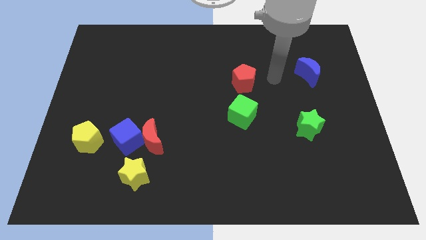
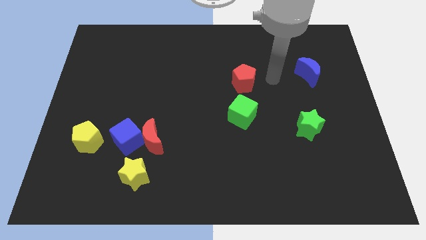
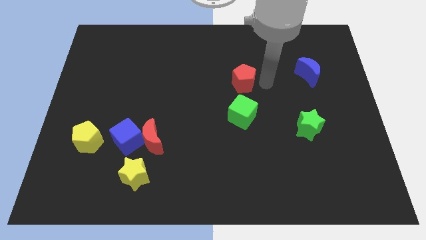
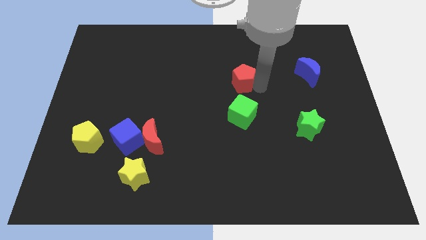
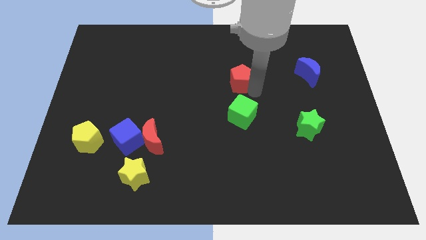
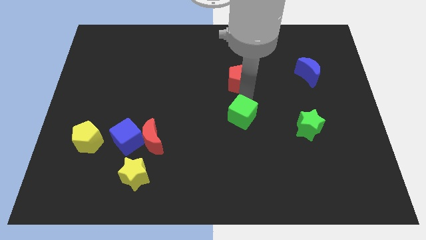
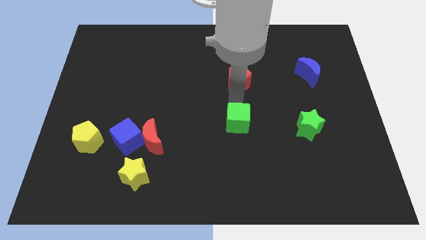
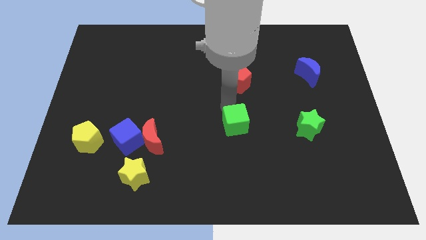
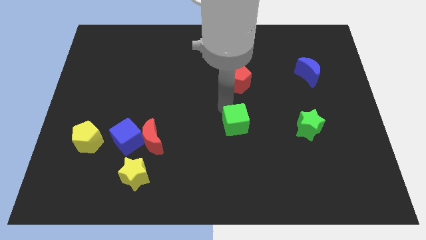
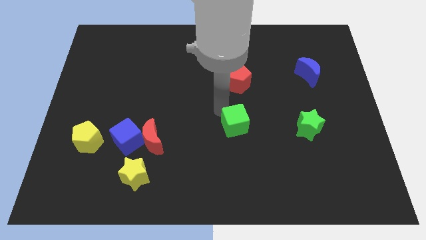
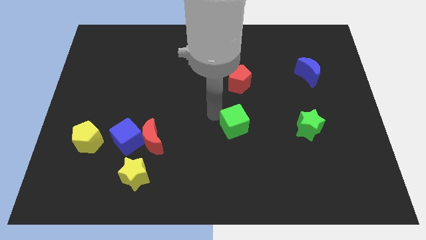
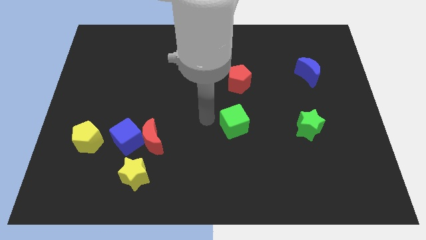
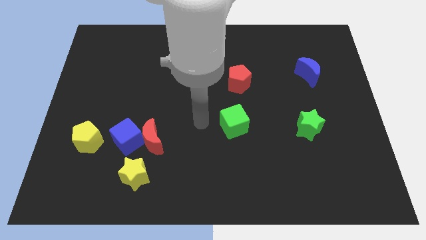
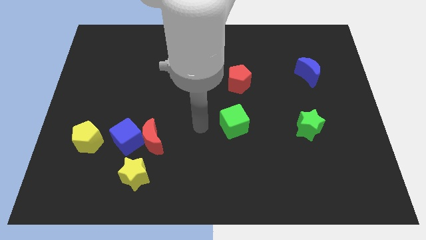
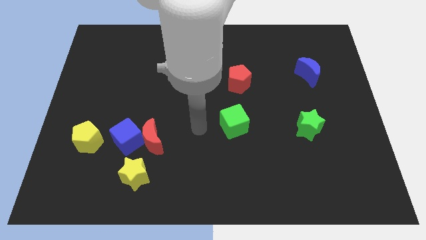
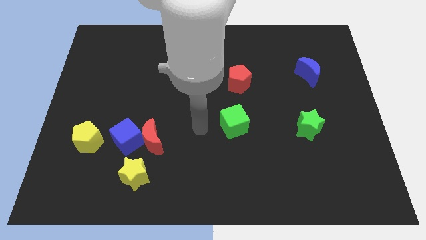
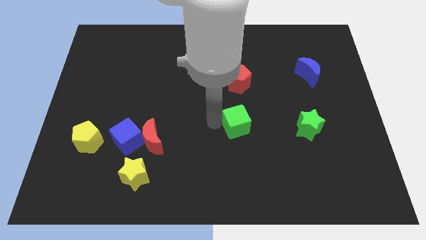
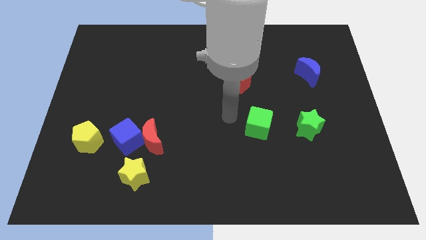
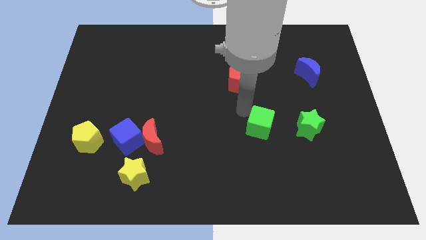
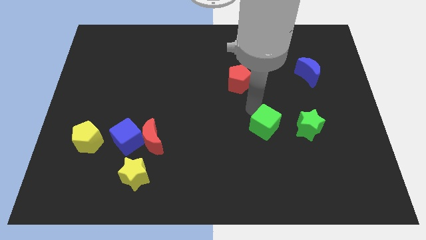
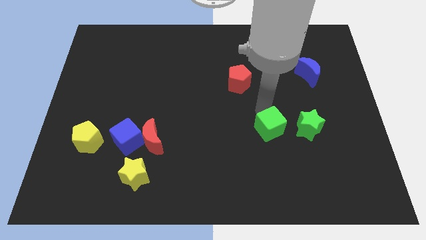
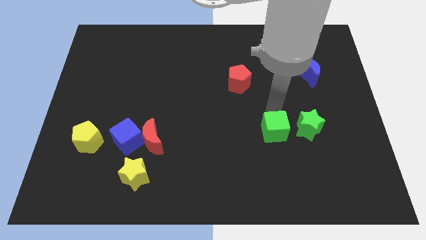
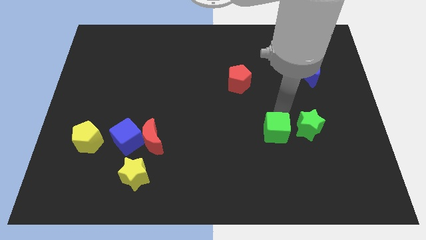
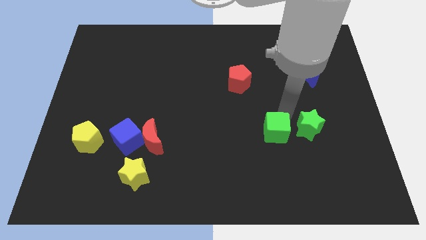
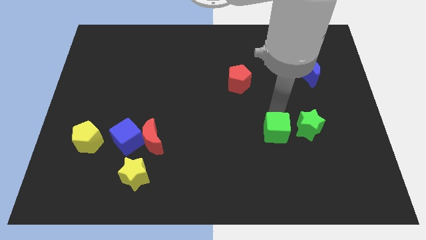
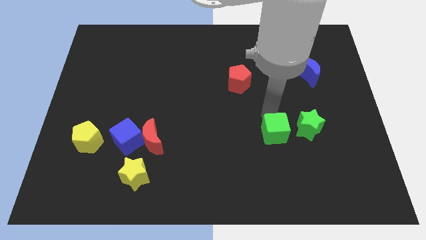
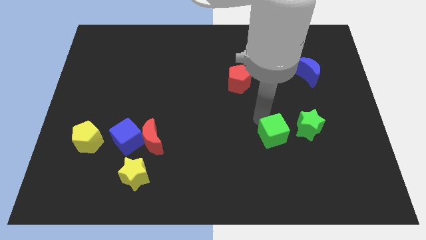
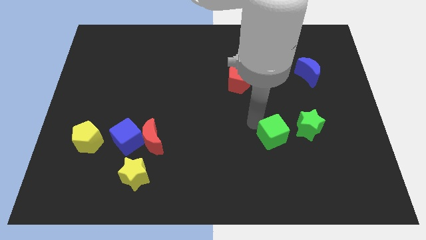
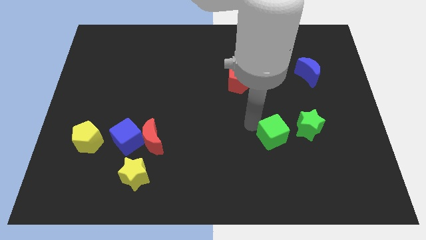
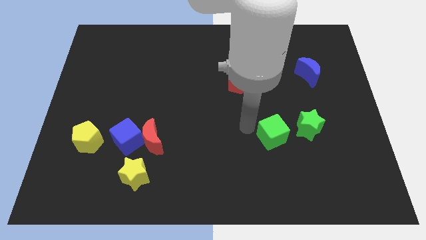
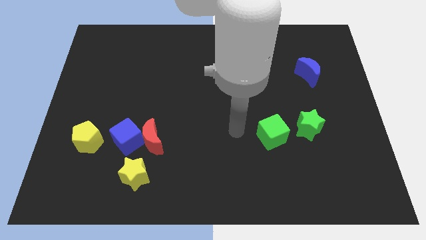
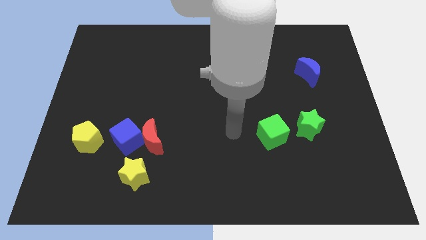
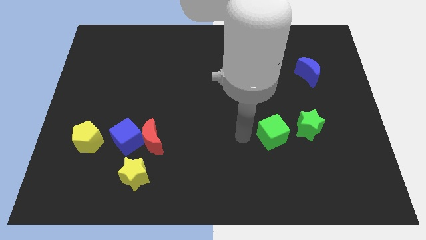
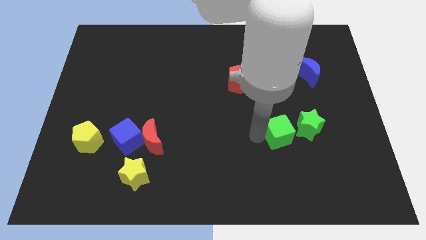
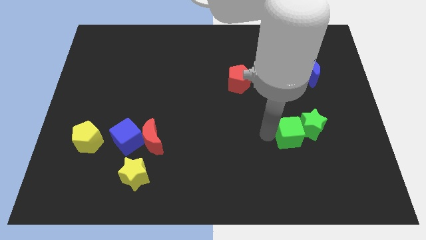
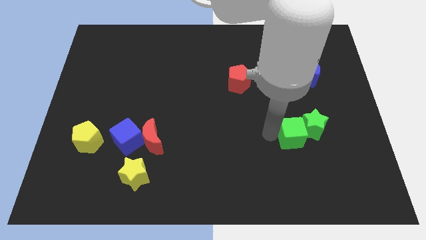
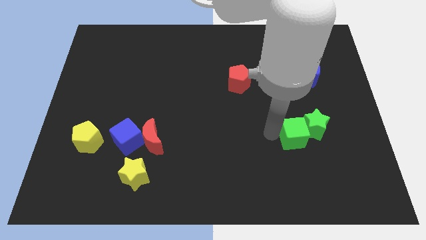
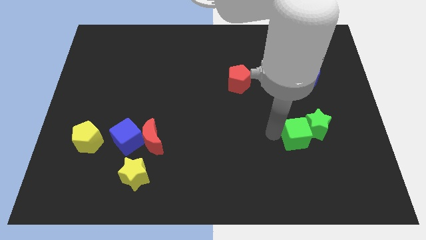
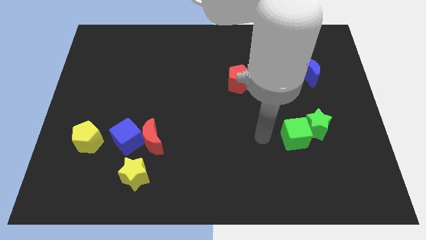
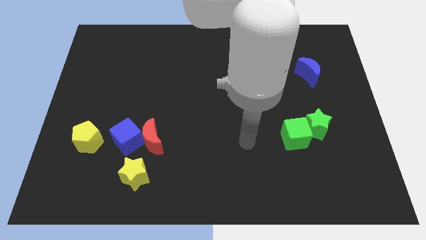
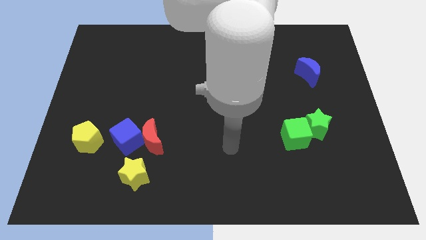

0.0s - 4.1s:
drag the green cube to the bottom left of the green star

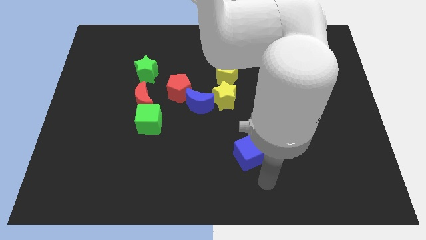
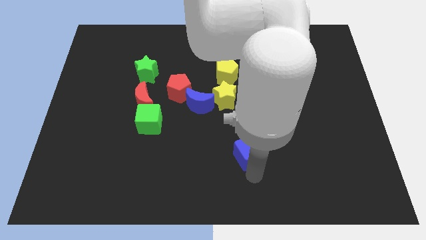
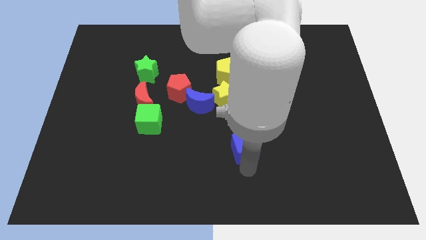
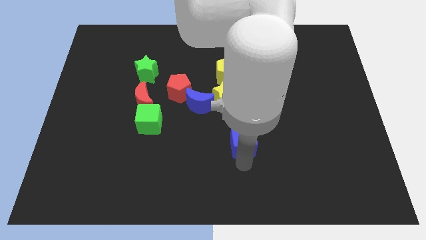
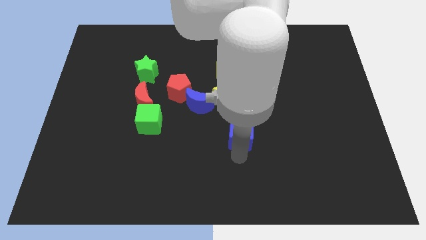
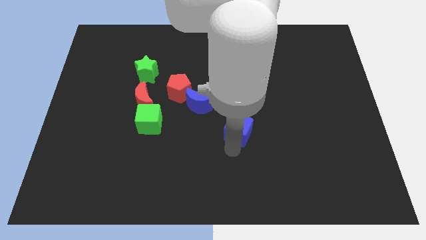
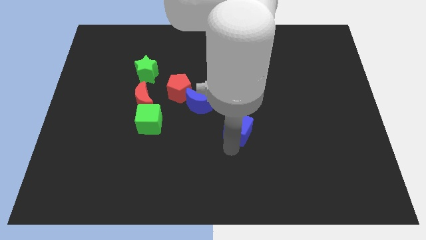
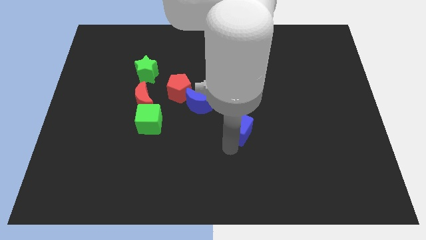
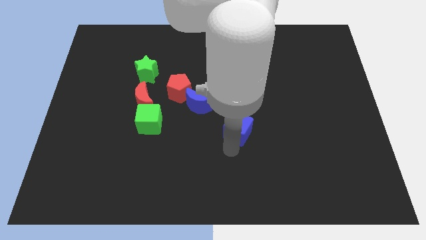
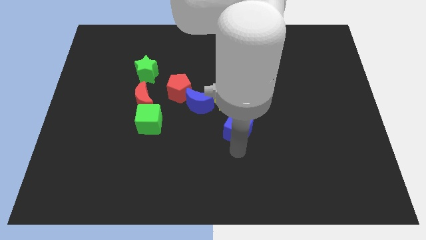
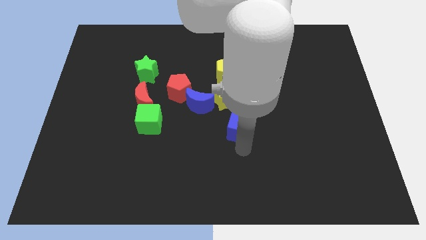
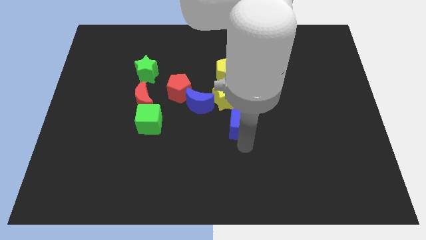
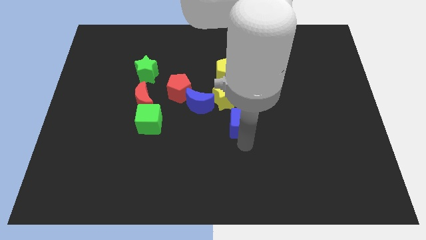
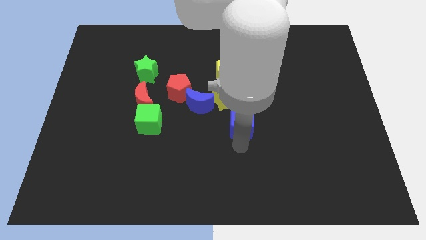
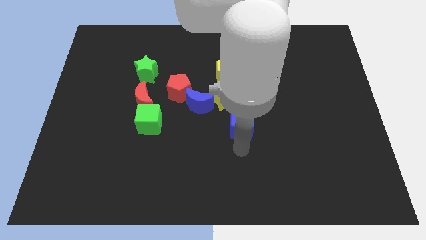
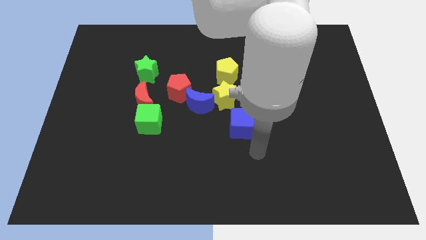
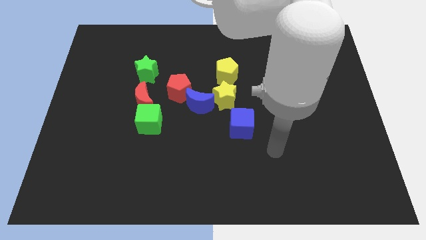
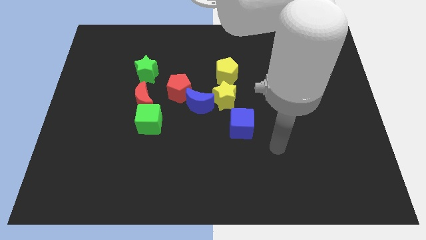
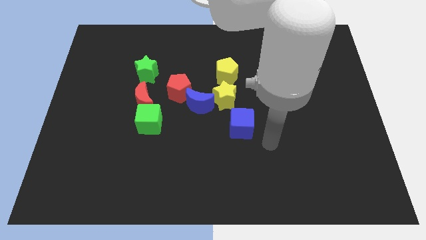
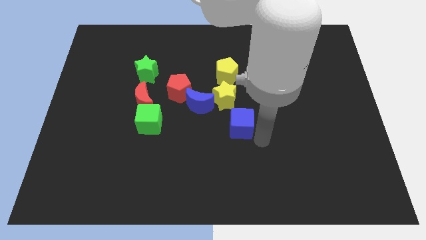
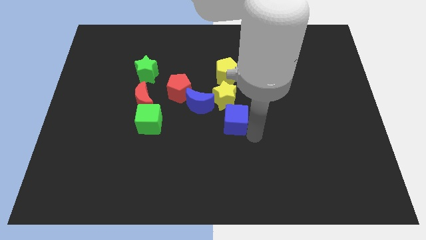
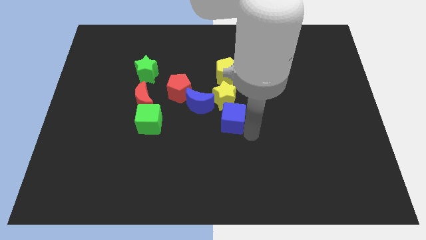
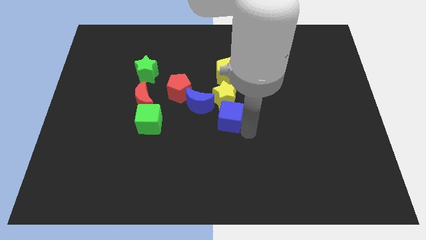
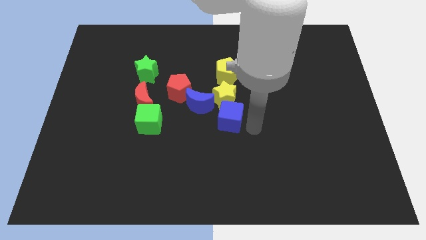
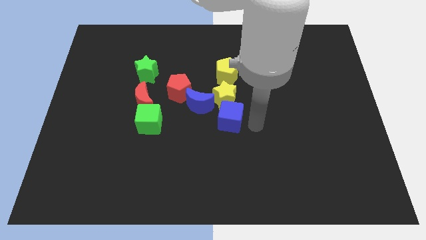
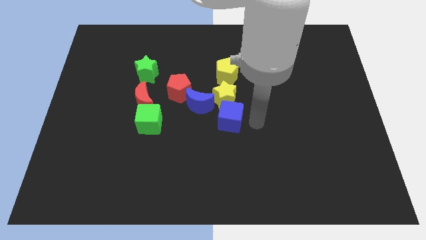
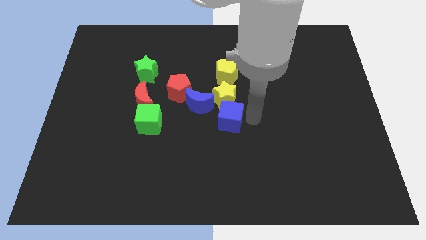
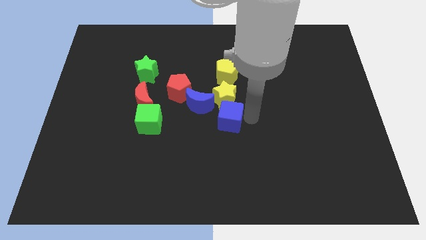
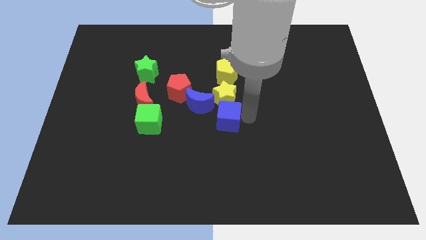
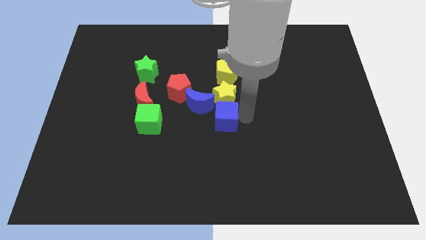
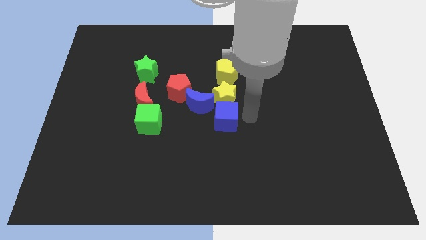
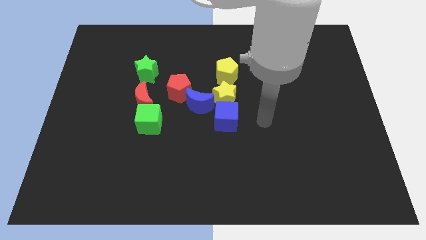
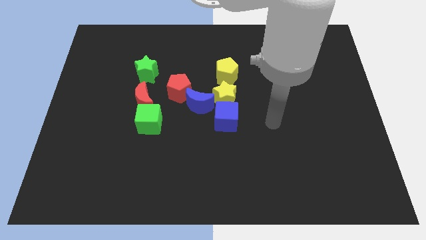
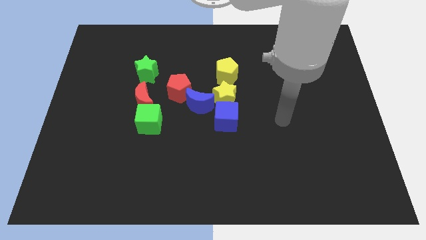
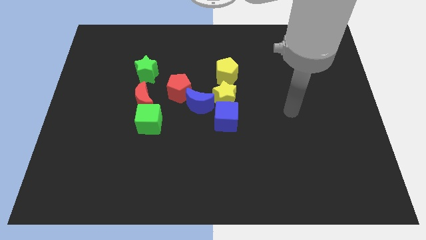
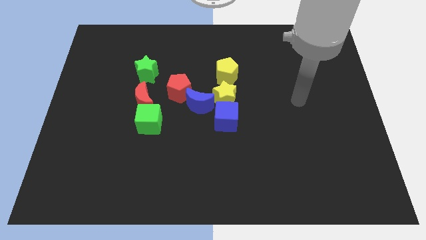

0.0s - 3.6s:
push the blue cube below the yellow star

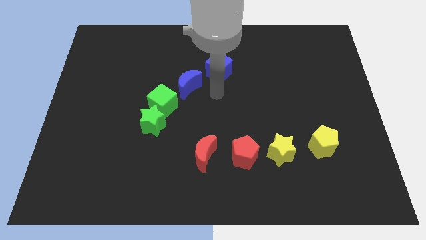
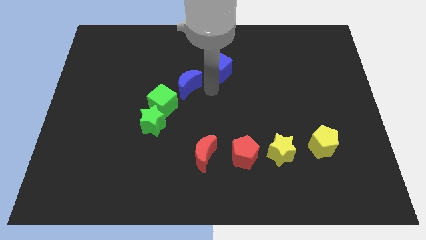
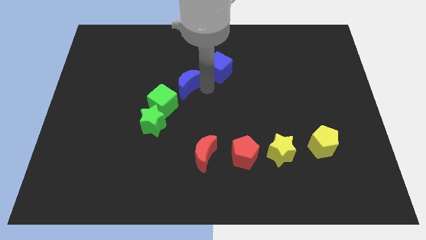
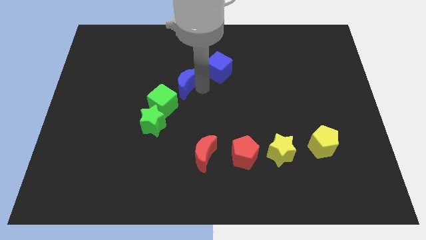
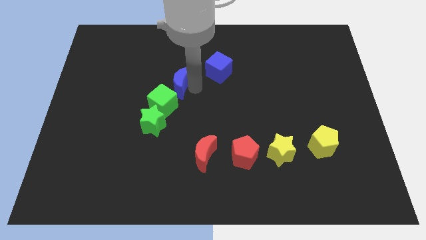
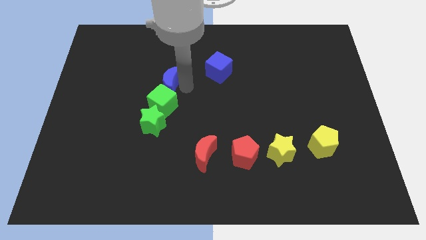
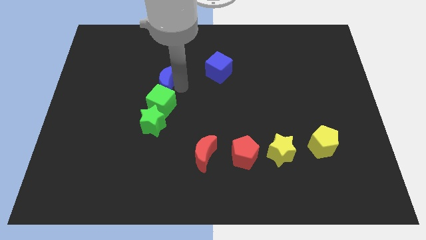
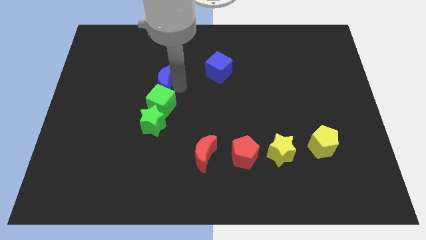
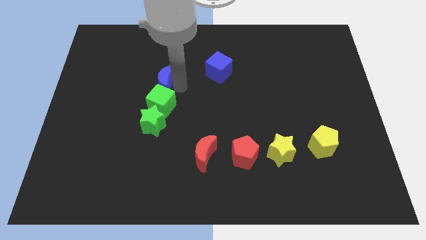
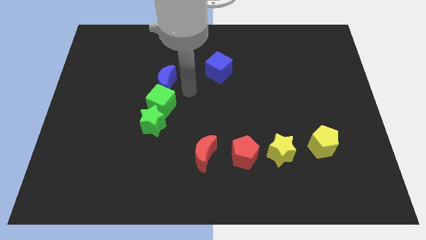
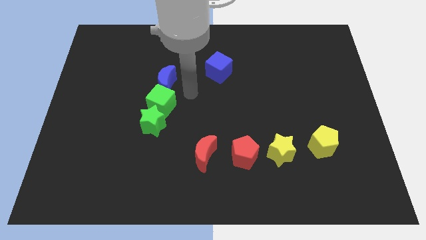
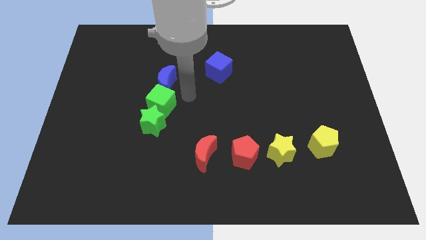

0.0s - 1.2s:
place blue moon to the left of blue cube
